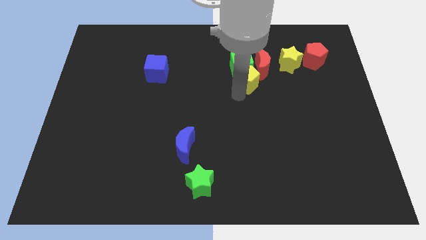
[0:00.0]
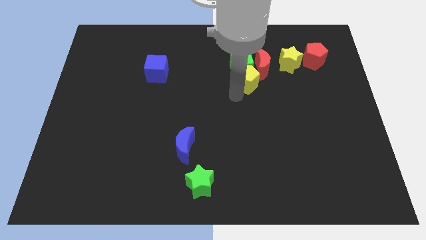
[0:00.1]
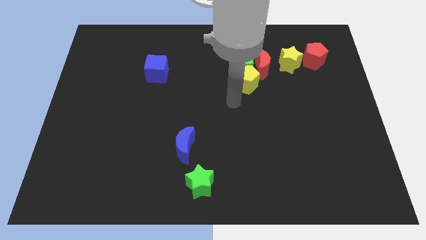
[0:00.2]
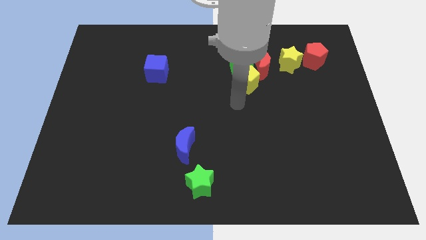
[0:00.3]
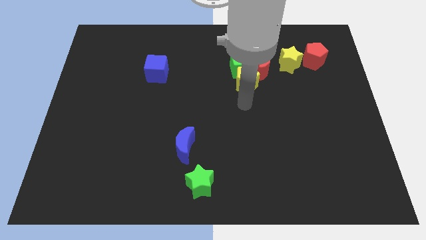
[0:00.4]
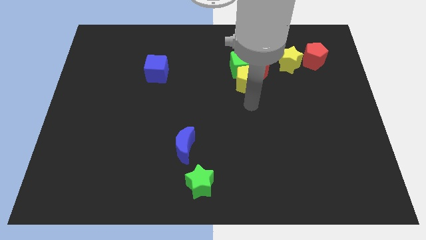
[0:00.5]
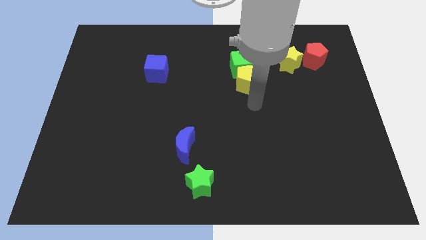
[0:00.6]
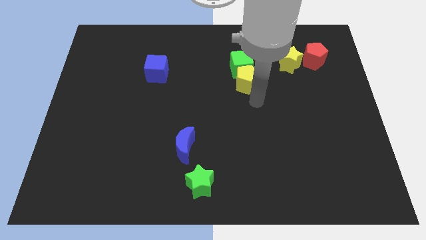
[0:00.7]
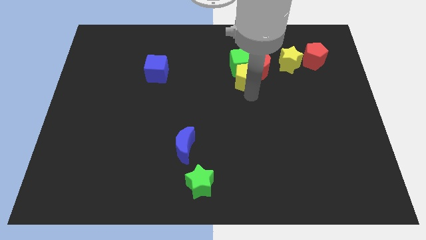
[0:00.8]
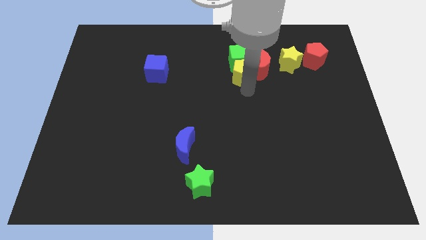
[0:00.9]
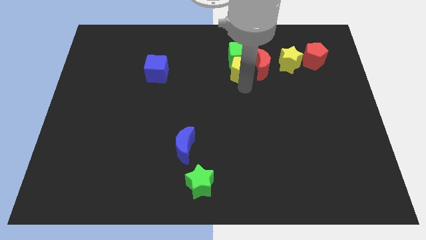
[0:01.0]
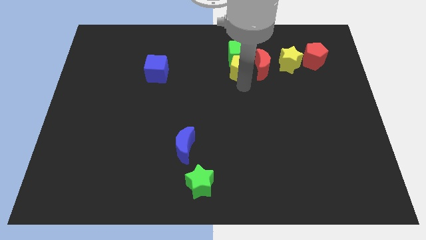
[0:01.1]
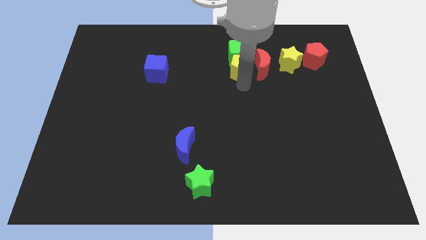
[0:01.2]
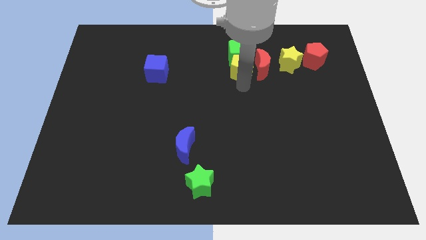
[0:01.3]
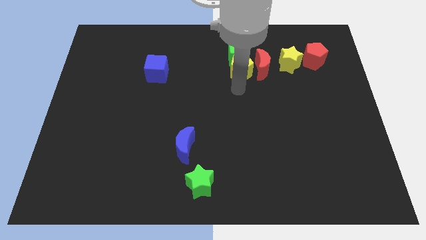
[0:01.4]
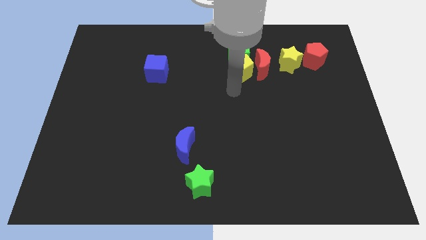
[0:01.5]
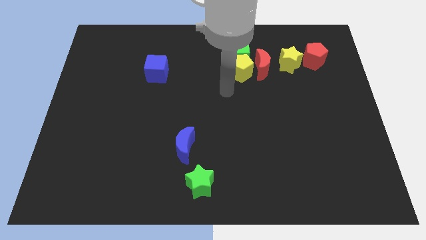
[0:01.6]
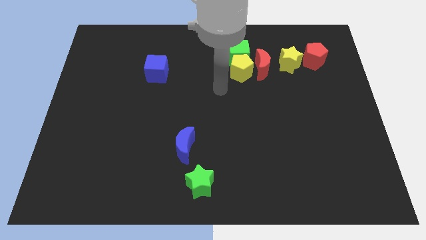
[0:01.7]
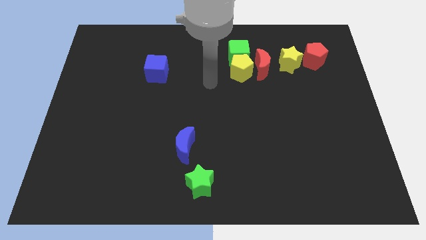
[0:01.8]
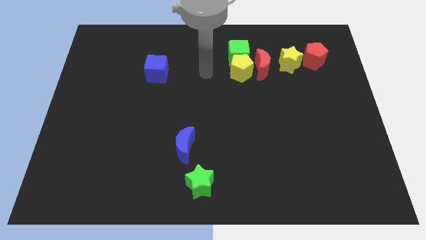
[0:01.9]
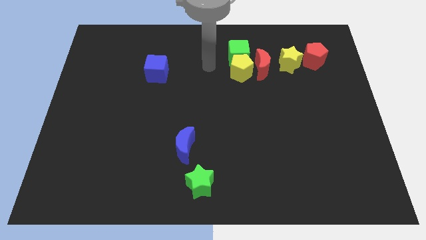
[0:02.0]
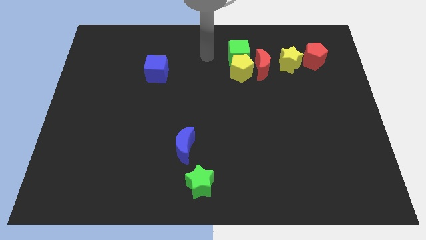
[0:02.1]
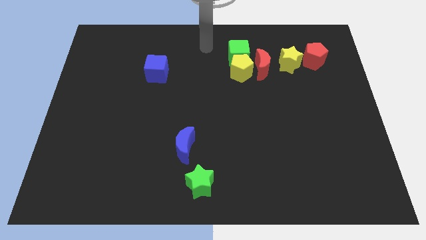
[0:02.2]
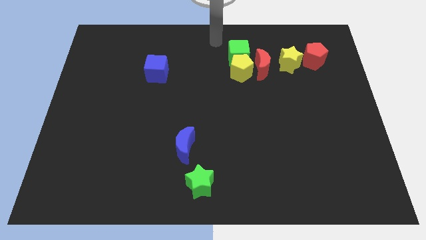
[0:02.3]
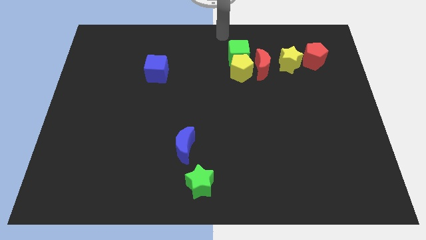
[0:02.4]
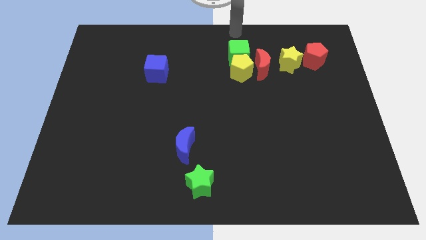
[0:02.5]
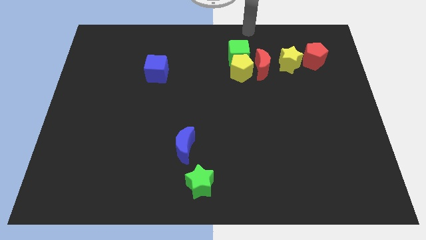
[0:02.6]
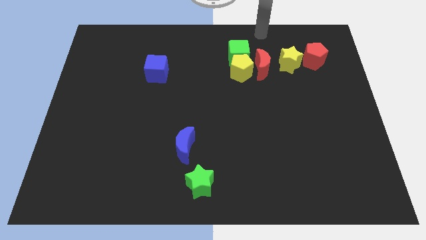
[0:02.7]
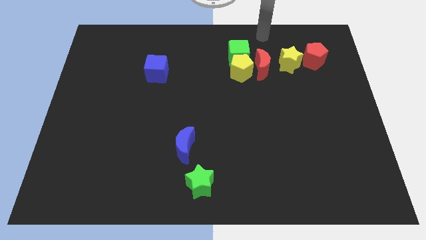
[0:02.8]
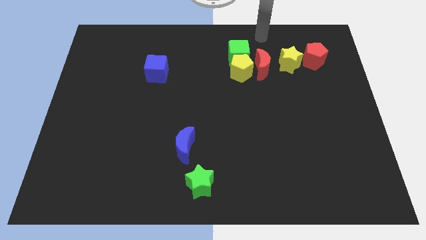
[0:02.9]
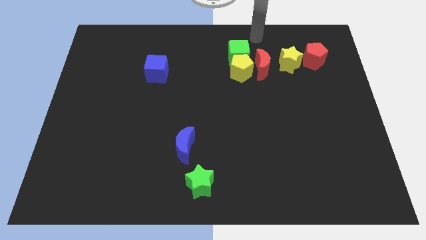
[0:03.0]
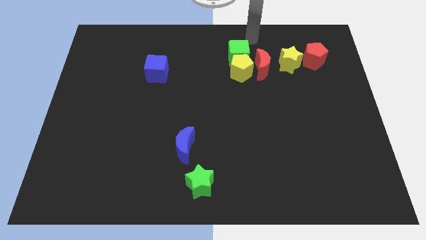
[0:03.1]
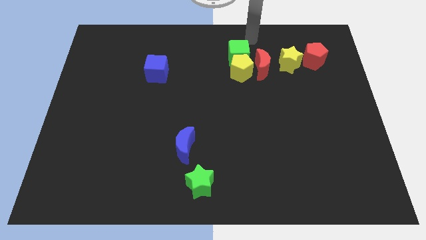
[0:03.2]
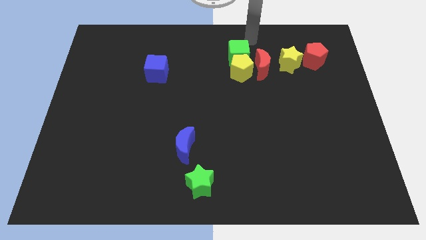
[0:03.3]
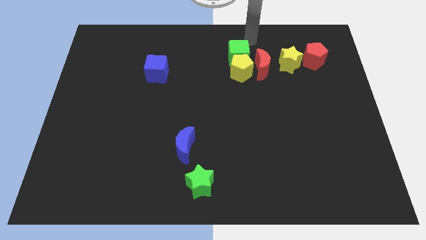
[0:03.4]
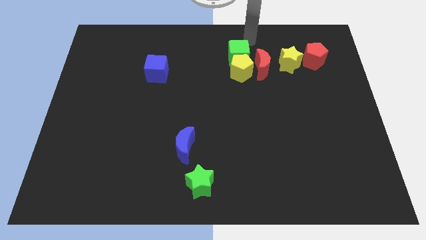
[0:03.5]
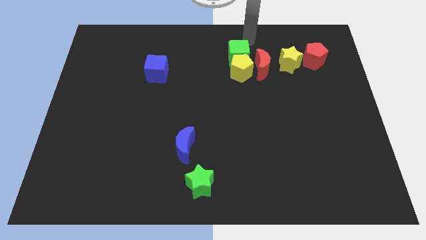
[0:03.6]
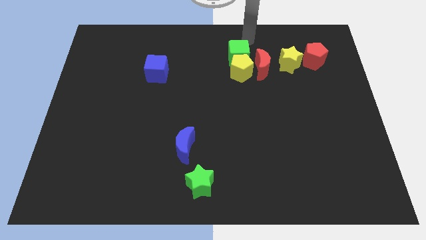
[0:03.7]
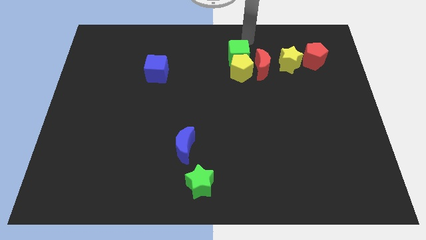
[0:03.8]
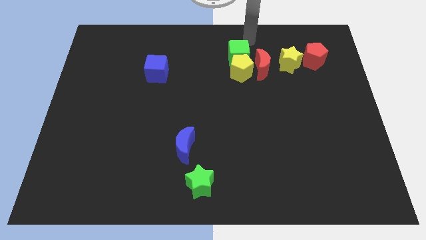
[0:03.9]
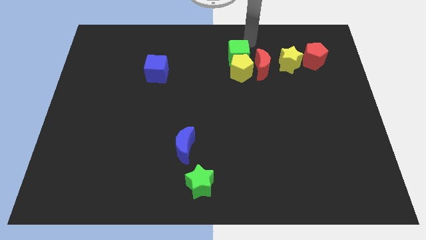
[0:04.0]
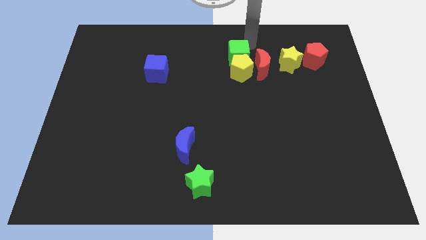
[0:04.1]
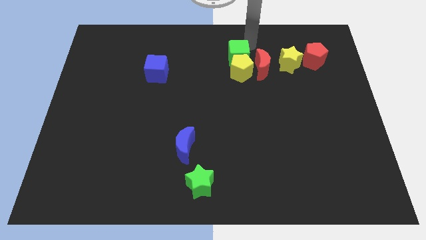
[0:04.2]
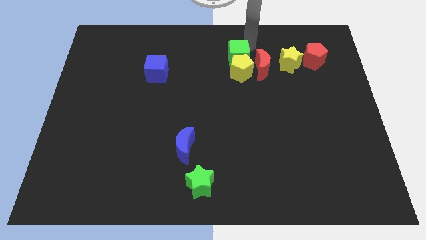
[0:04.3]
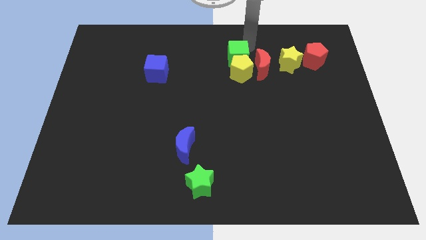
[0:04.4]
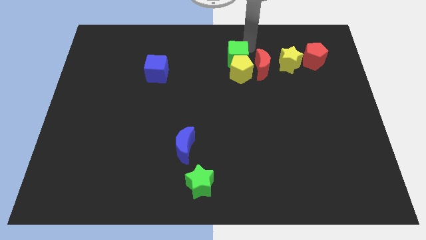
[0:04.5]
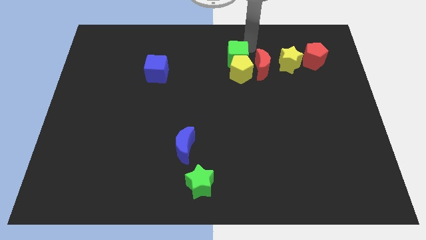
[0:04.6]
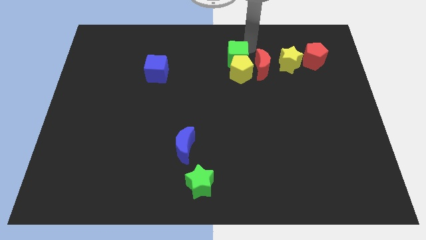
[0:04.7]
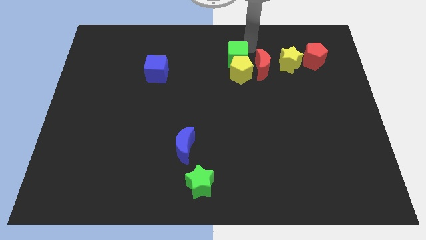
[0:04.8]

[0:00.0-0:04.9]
push the green cube into the yellow pentagon

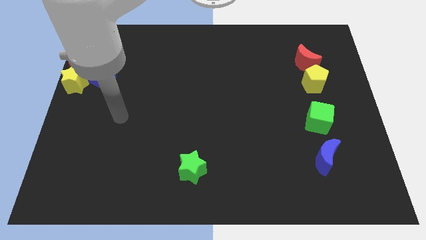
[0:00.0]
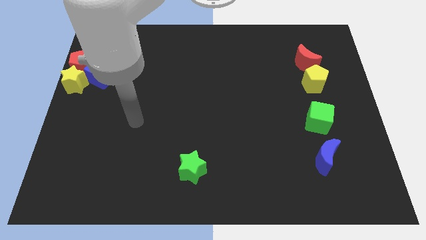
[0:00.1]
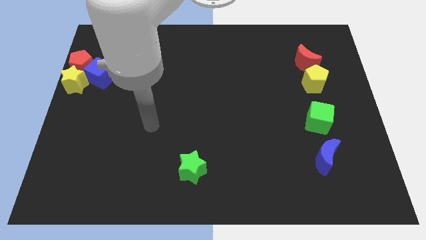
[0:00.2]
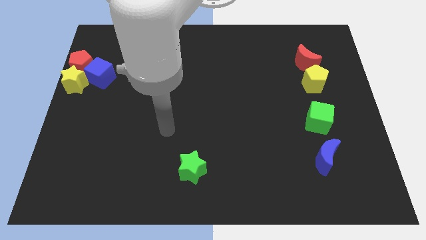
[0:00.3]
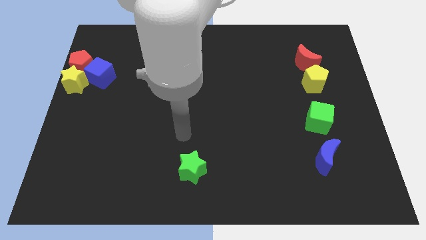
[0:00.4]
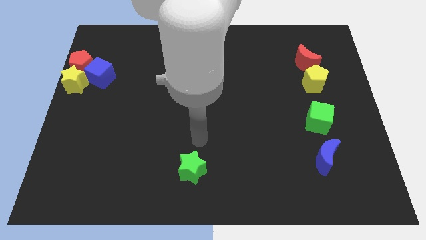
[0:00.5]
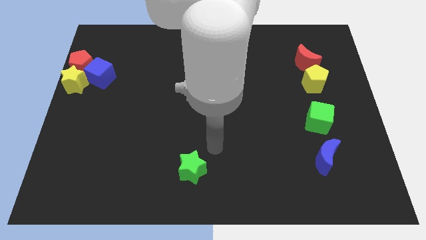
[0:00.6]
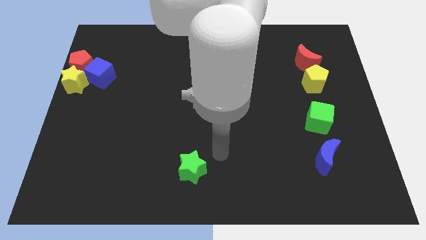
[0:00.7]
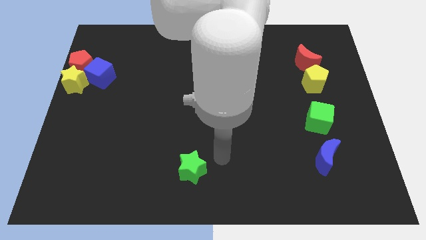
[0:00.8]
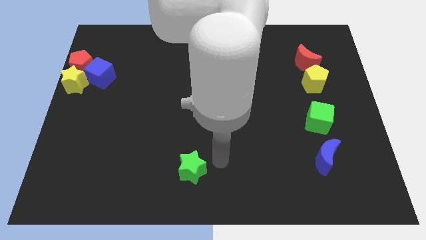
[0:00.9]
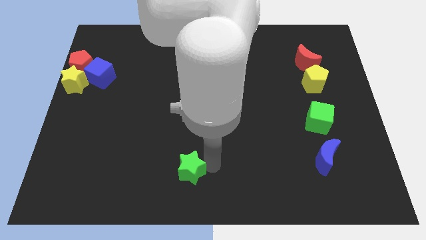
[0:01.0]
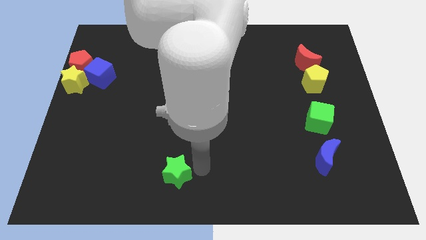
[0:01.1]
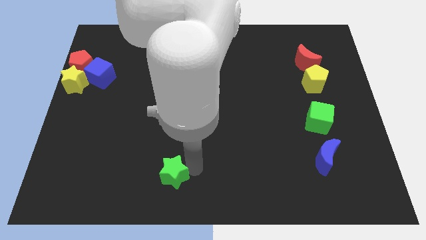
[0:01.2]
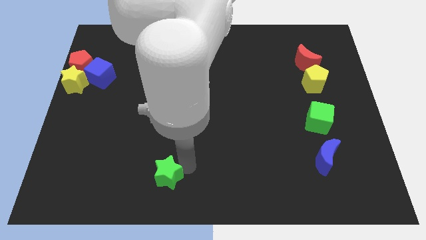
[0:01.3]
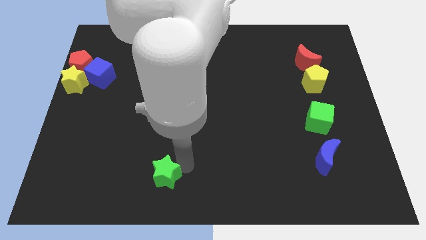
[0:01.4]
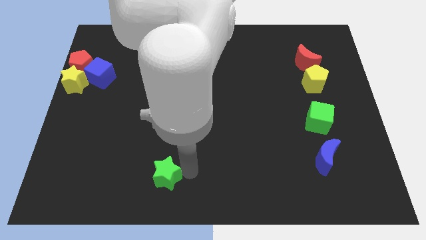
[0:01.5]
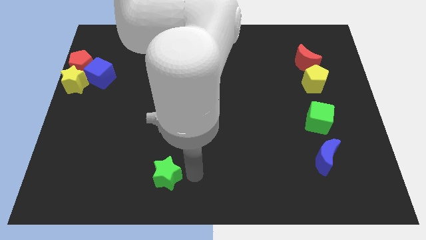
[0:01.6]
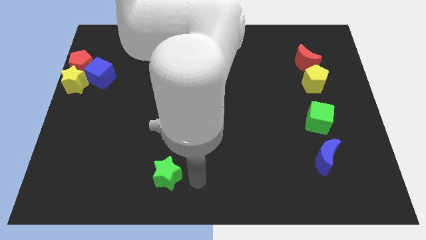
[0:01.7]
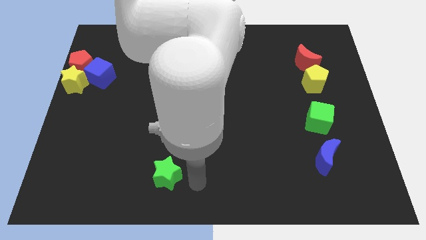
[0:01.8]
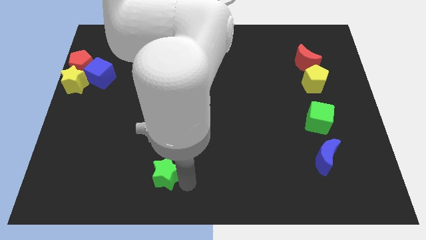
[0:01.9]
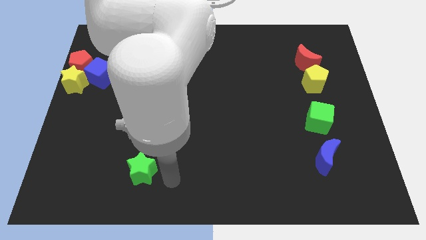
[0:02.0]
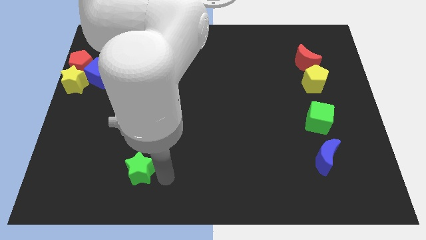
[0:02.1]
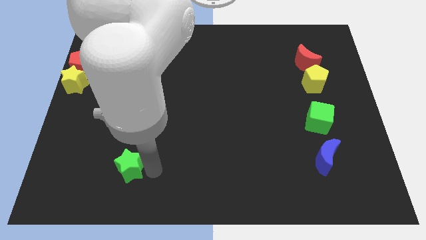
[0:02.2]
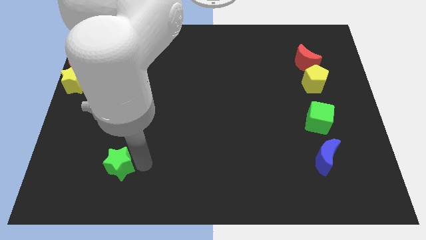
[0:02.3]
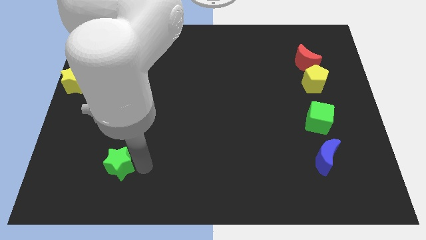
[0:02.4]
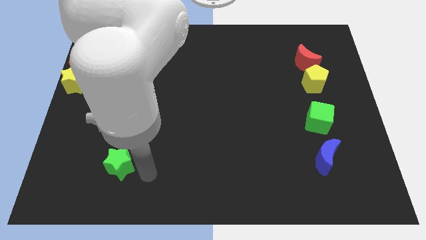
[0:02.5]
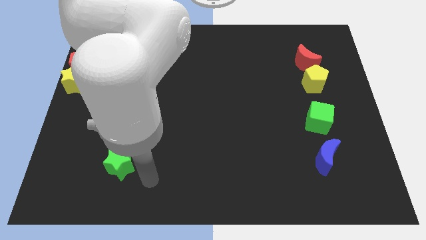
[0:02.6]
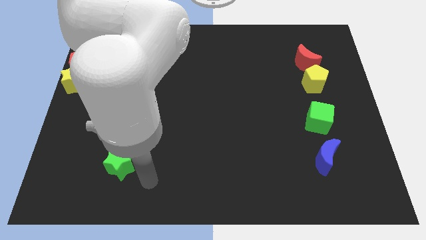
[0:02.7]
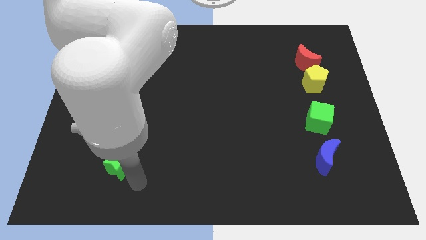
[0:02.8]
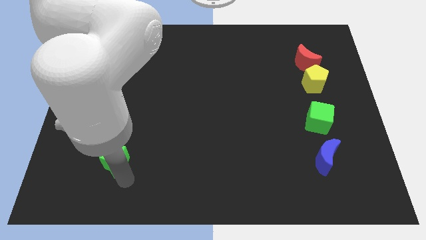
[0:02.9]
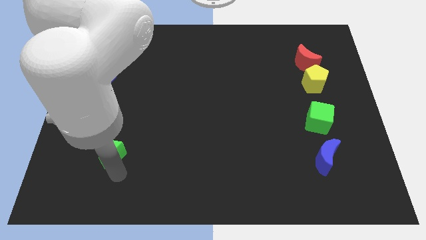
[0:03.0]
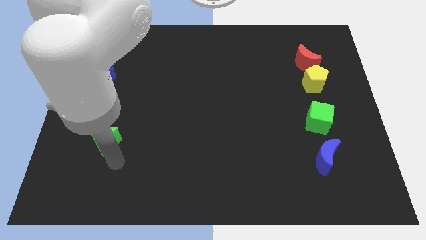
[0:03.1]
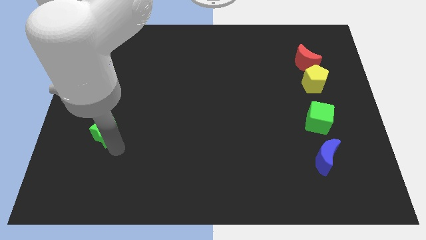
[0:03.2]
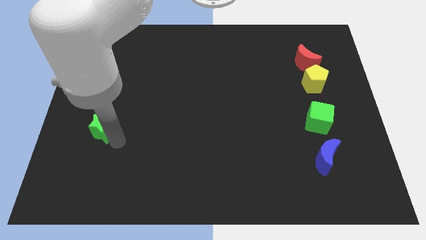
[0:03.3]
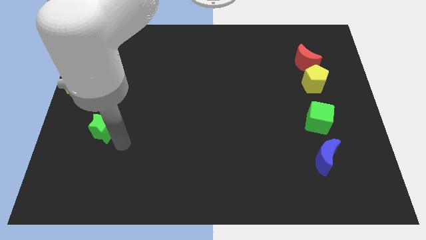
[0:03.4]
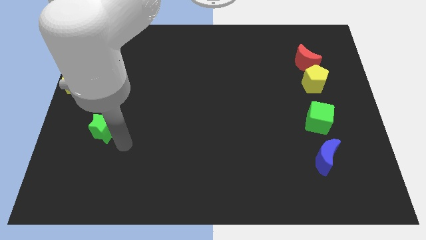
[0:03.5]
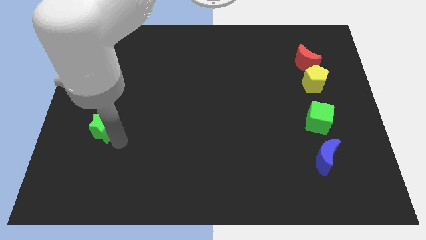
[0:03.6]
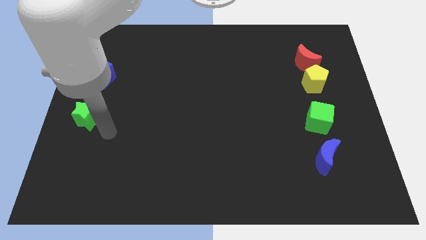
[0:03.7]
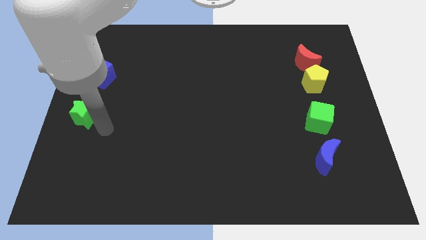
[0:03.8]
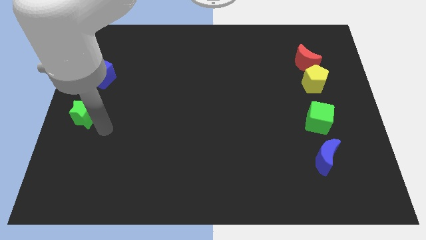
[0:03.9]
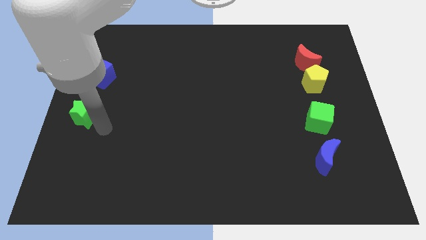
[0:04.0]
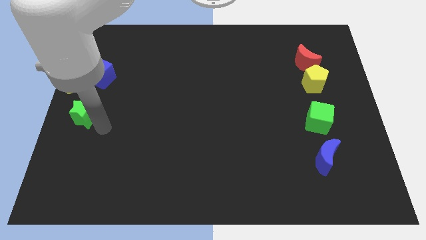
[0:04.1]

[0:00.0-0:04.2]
place the green star parallel to green cube
